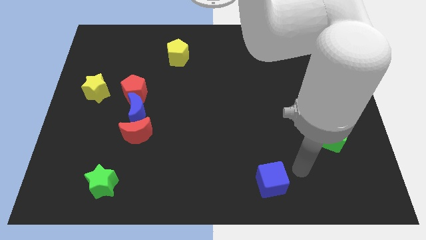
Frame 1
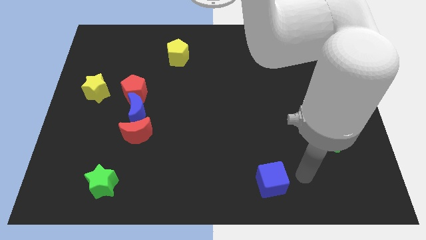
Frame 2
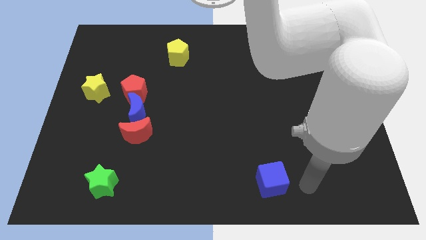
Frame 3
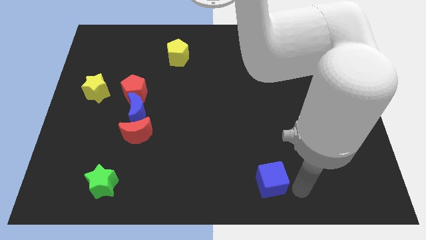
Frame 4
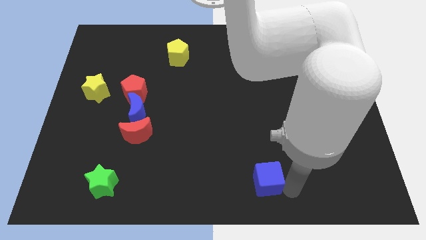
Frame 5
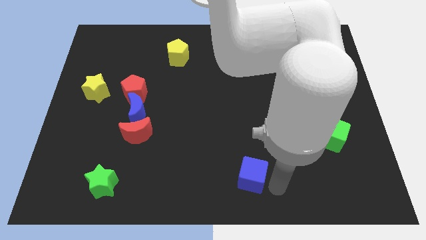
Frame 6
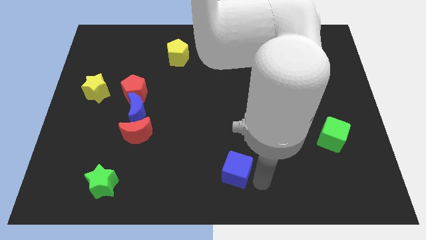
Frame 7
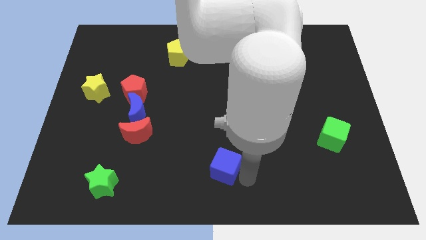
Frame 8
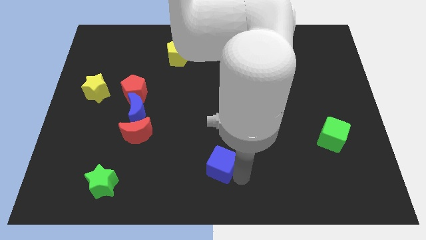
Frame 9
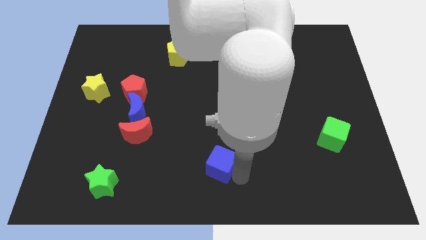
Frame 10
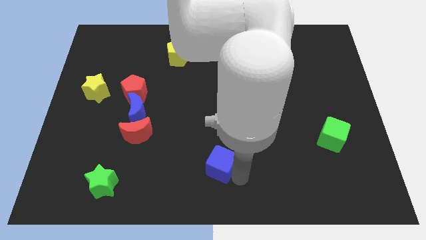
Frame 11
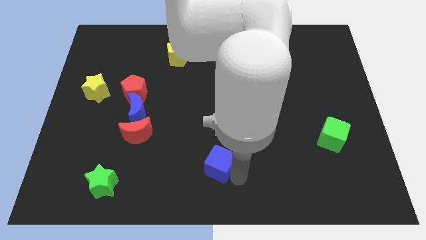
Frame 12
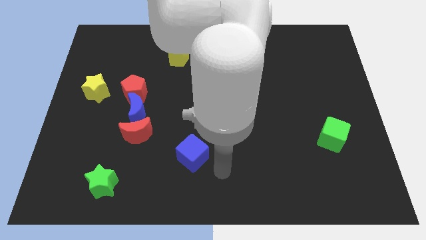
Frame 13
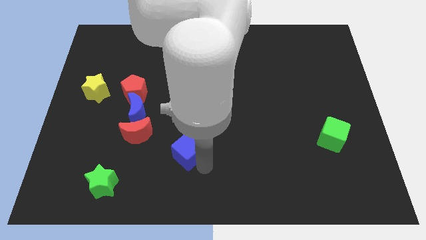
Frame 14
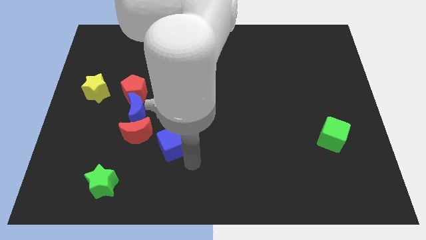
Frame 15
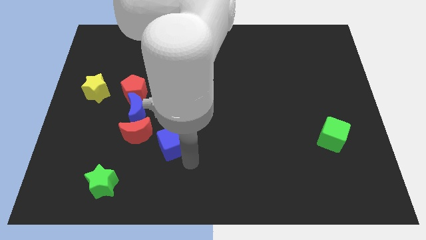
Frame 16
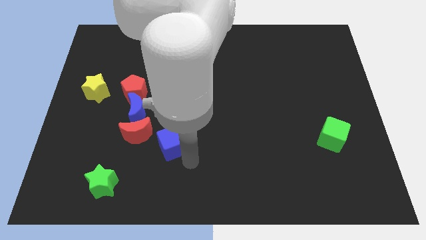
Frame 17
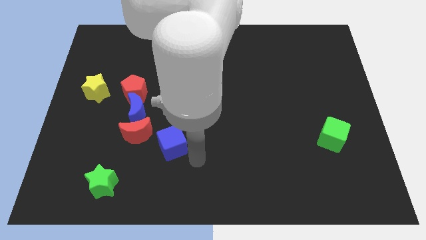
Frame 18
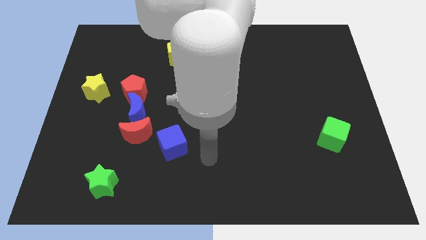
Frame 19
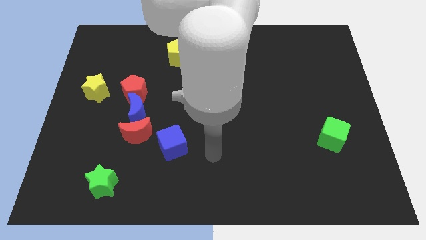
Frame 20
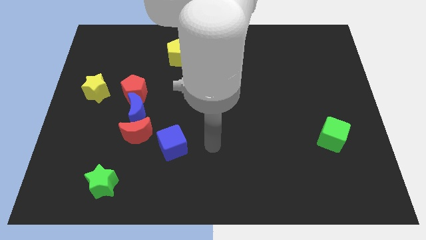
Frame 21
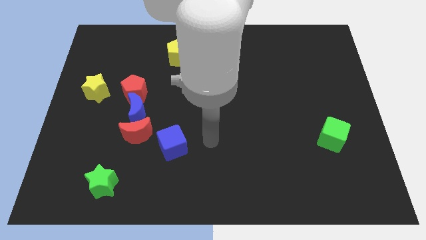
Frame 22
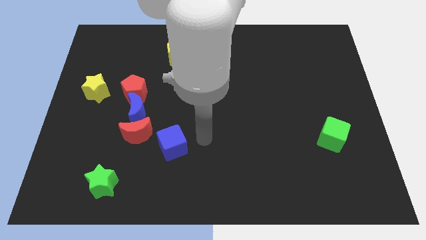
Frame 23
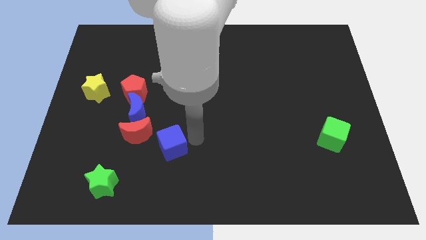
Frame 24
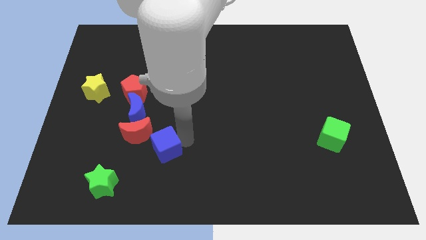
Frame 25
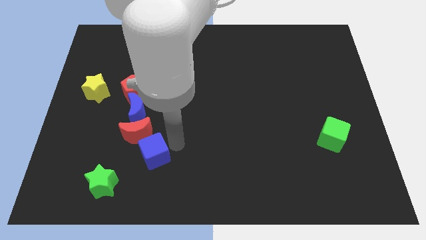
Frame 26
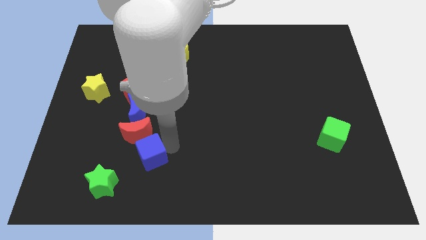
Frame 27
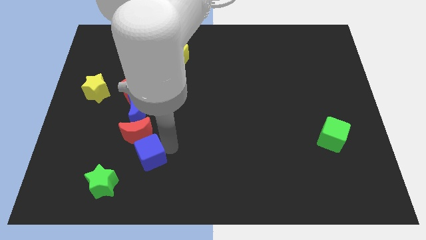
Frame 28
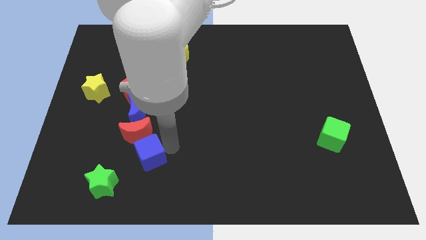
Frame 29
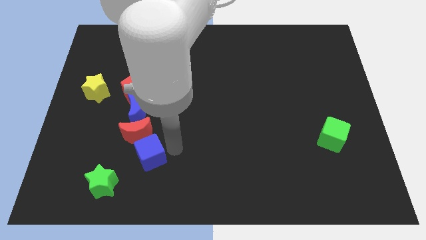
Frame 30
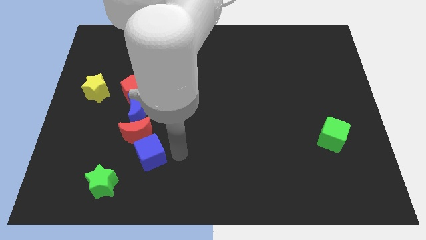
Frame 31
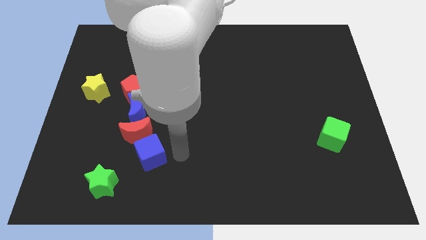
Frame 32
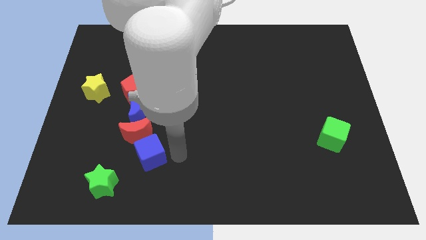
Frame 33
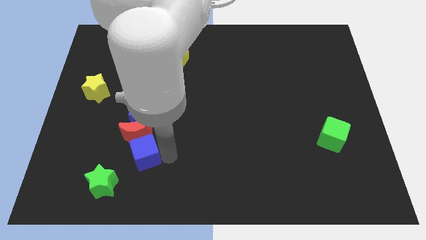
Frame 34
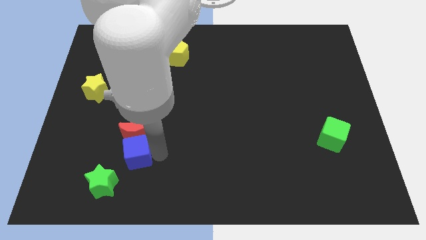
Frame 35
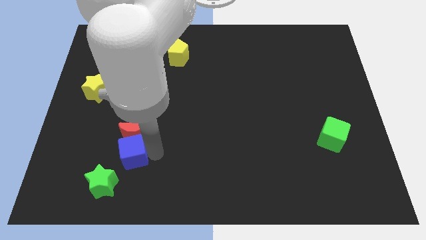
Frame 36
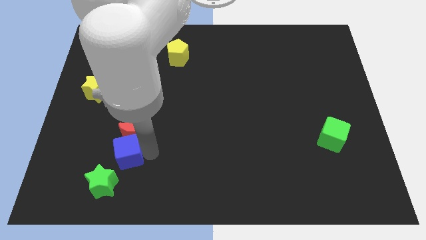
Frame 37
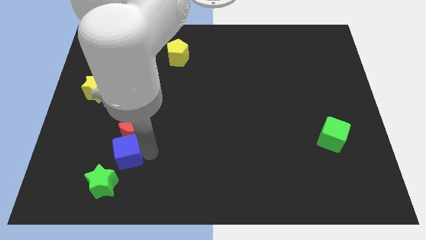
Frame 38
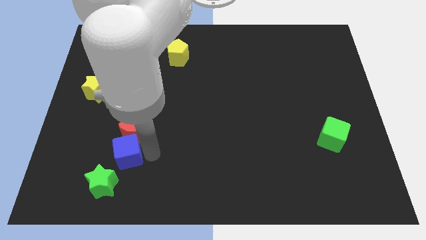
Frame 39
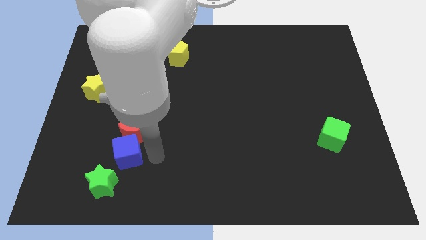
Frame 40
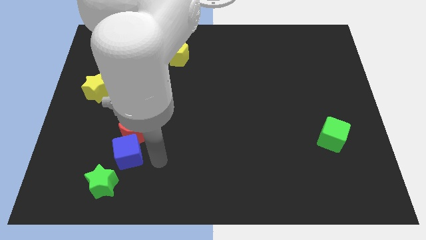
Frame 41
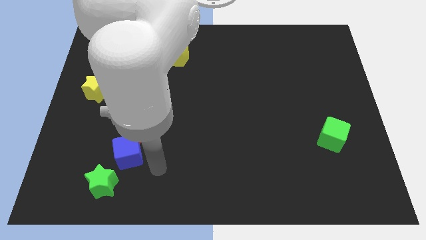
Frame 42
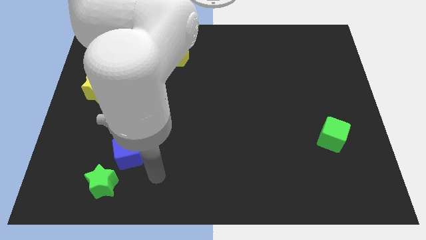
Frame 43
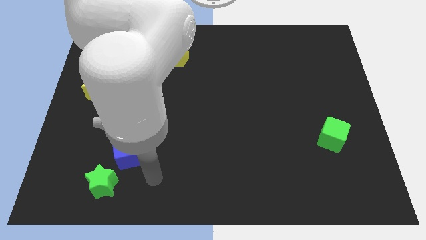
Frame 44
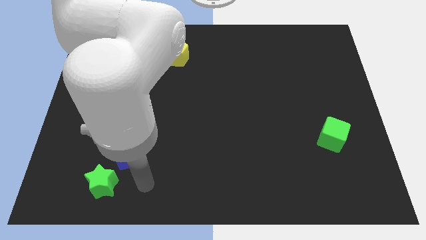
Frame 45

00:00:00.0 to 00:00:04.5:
place the blue cube at the bottom of the red crescent

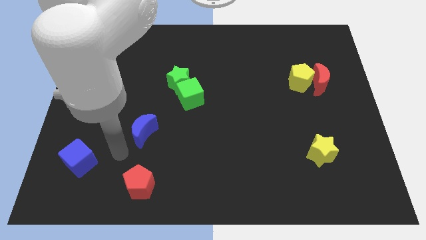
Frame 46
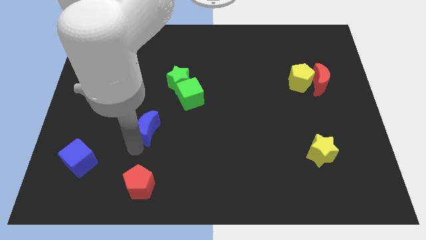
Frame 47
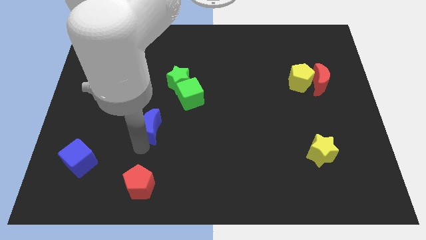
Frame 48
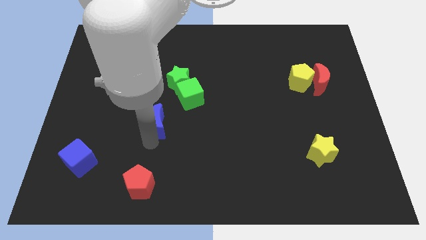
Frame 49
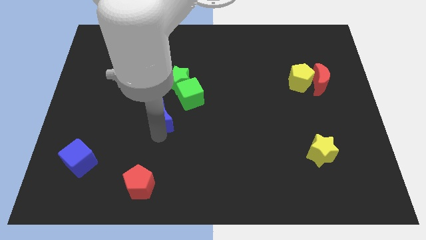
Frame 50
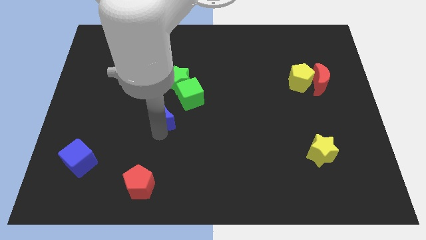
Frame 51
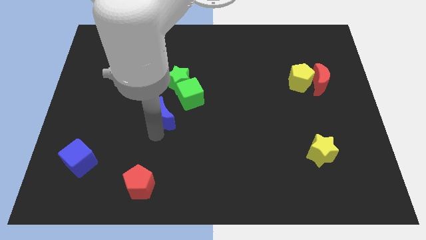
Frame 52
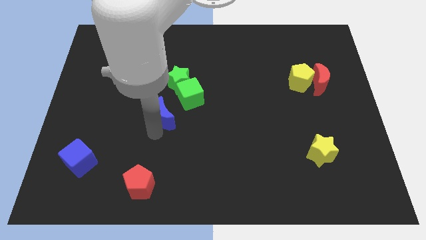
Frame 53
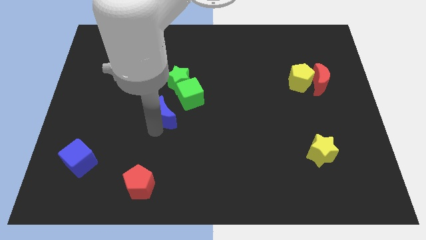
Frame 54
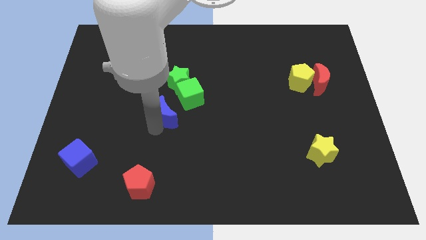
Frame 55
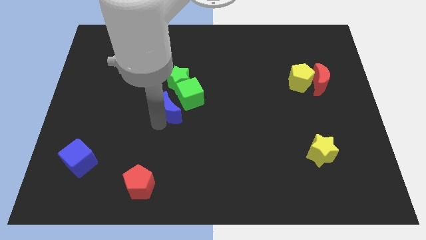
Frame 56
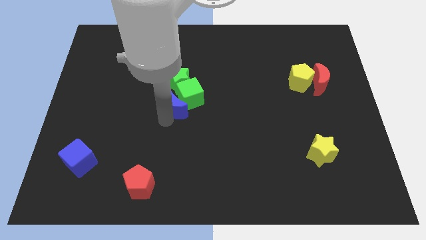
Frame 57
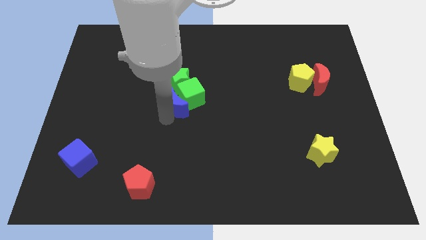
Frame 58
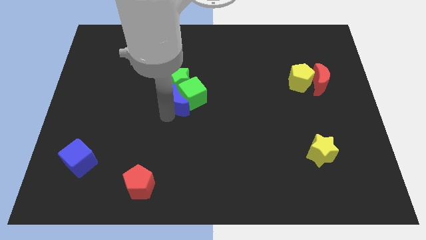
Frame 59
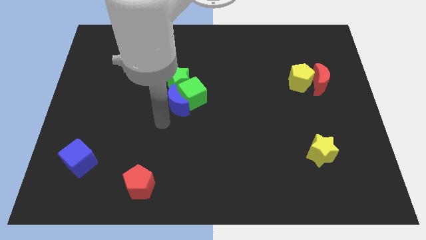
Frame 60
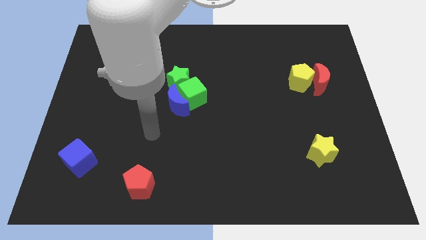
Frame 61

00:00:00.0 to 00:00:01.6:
push the blue crescent into green cube

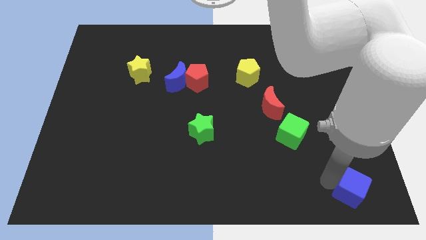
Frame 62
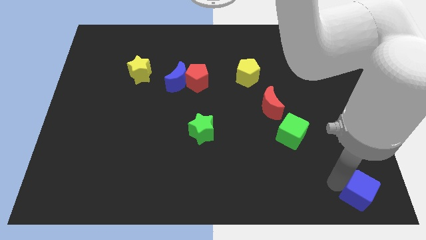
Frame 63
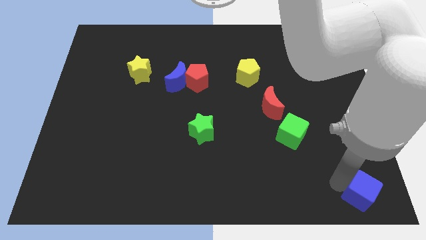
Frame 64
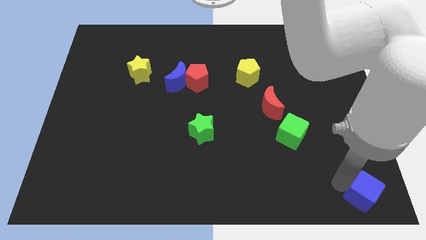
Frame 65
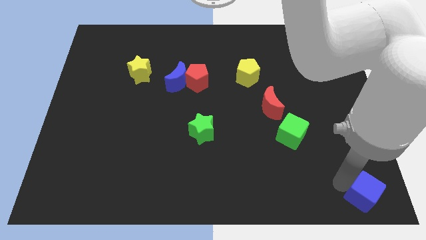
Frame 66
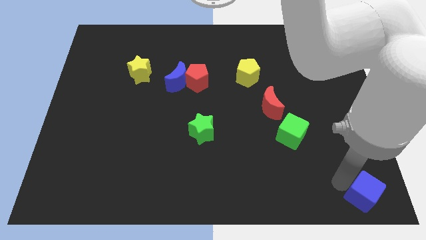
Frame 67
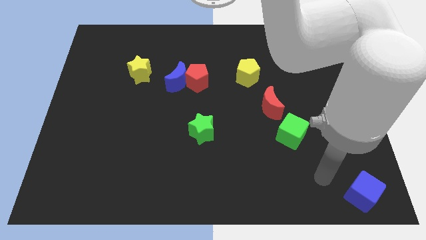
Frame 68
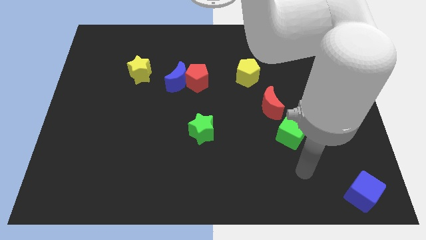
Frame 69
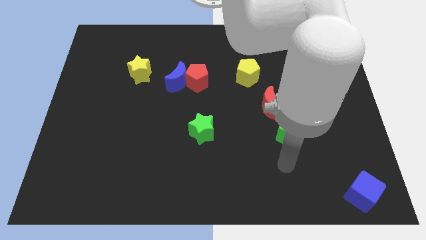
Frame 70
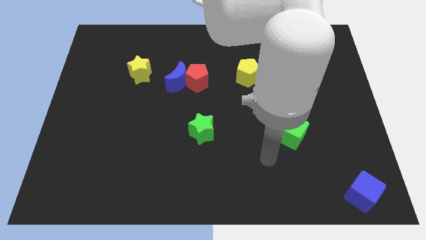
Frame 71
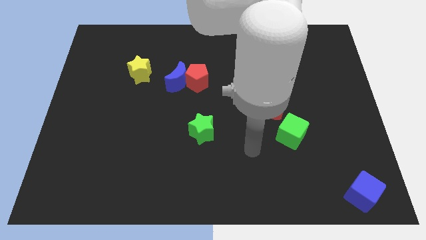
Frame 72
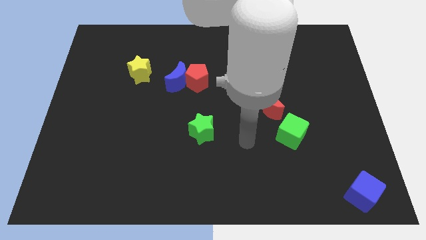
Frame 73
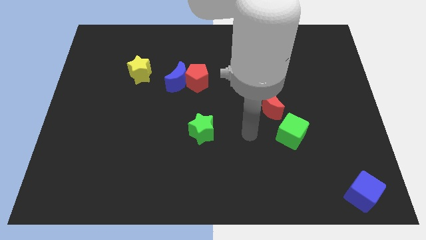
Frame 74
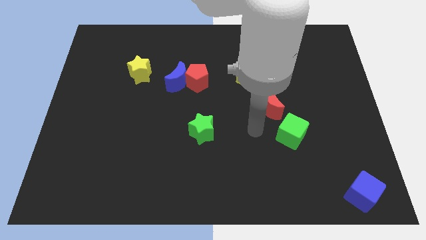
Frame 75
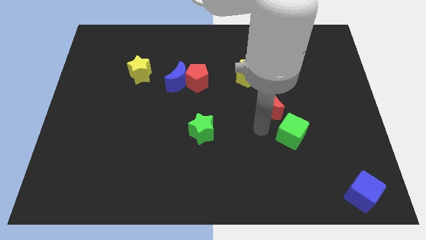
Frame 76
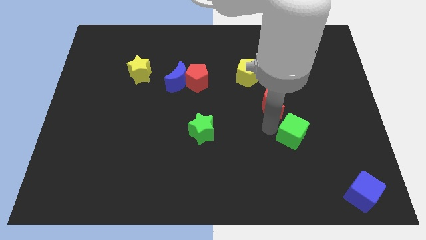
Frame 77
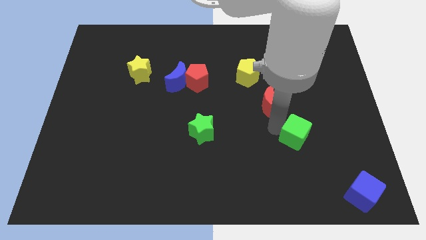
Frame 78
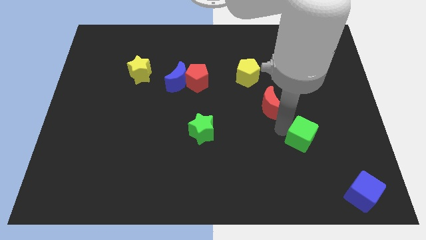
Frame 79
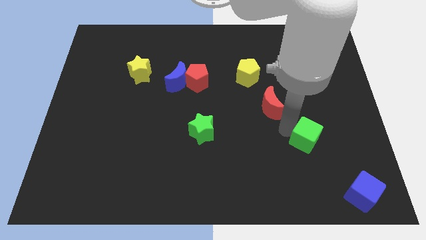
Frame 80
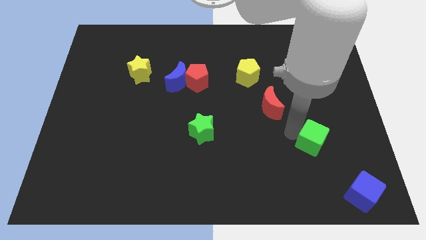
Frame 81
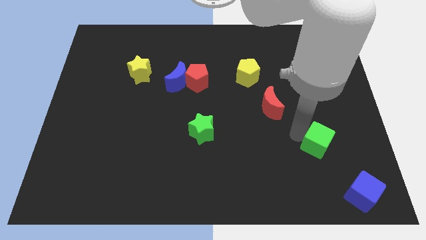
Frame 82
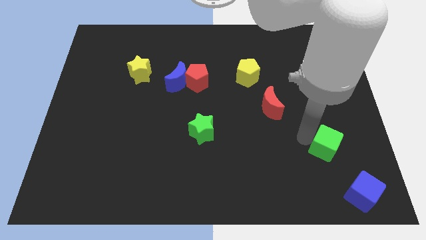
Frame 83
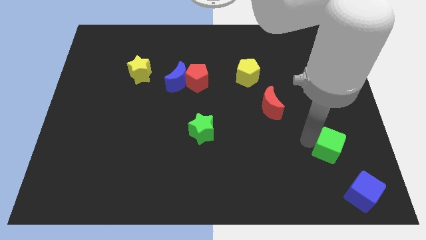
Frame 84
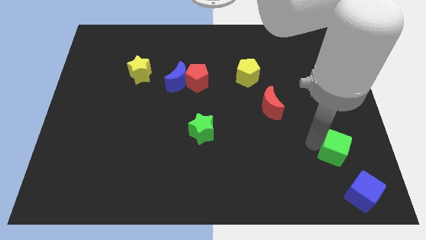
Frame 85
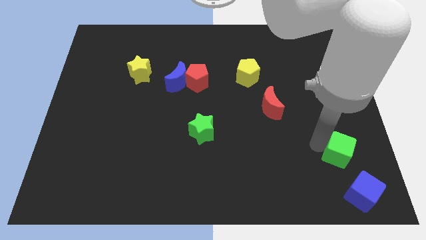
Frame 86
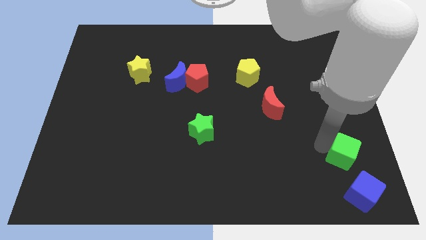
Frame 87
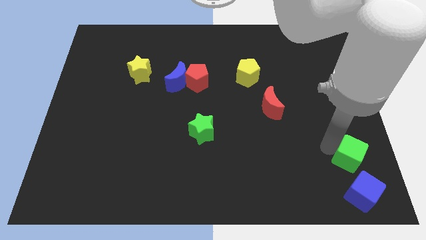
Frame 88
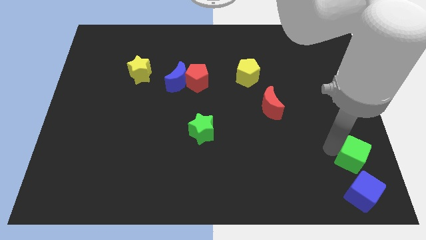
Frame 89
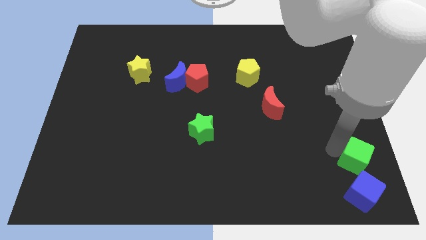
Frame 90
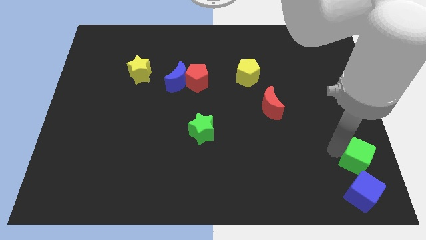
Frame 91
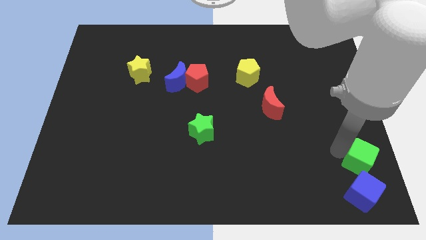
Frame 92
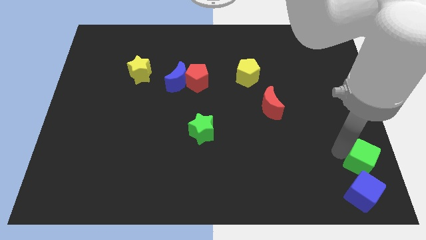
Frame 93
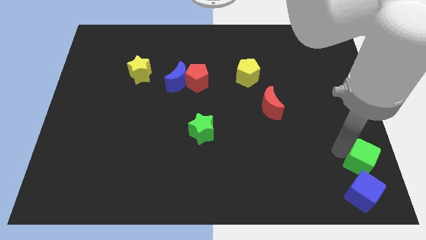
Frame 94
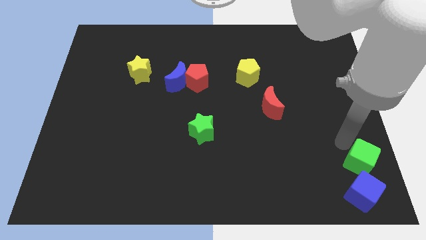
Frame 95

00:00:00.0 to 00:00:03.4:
move the green cube to the top side of the blue cube
